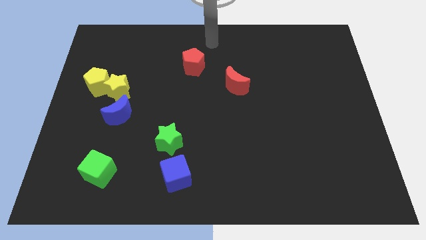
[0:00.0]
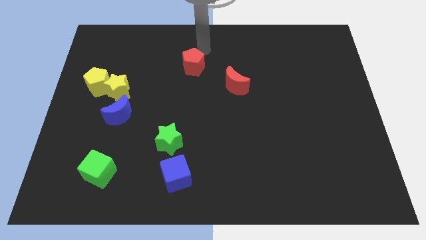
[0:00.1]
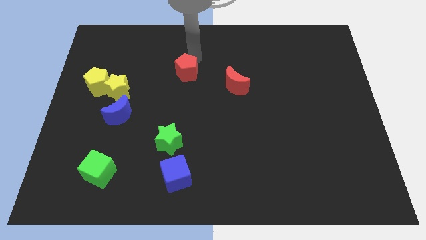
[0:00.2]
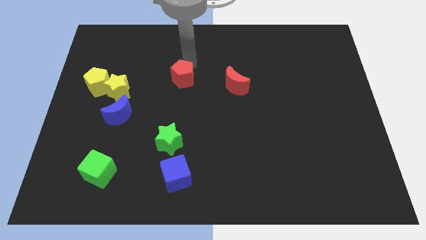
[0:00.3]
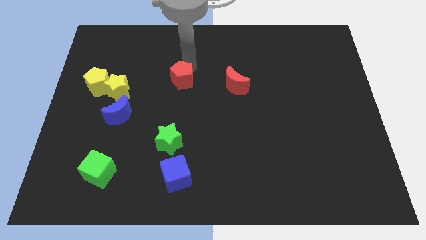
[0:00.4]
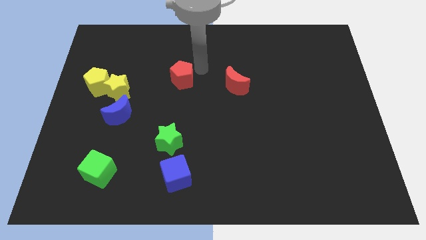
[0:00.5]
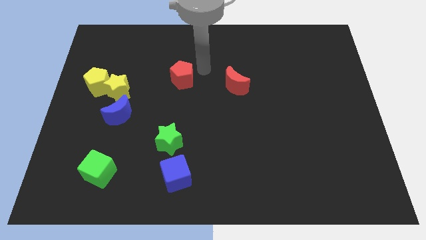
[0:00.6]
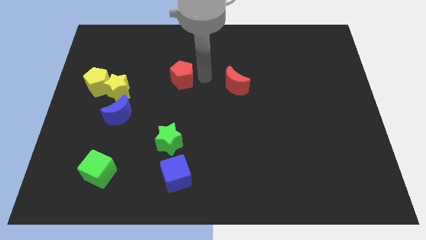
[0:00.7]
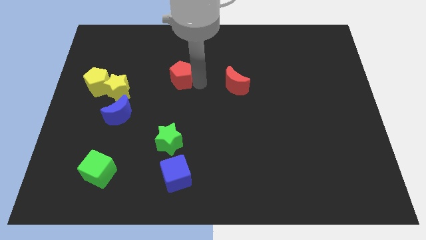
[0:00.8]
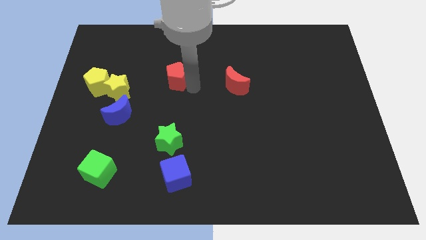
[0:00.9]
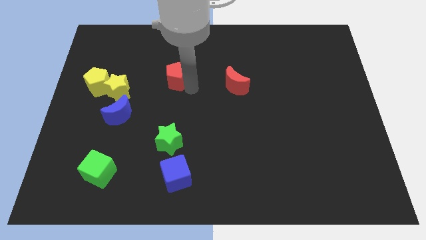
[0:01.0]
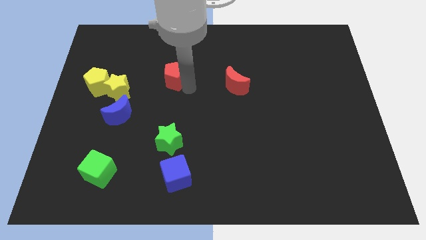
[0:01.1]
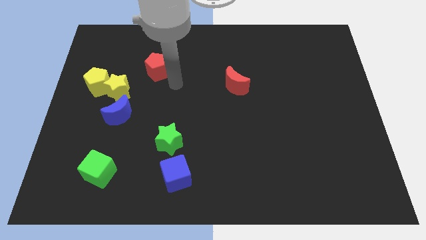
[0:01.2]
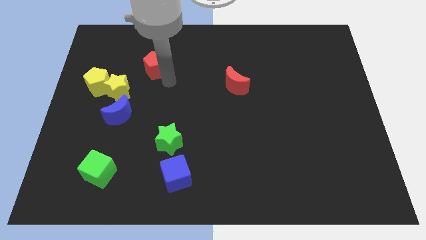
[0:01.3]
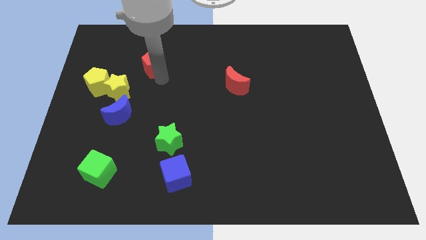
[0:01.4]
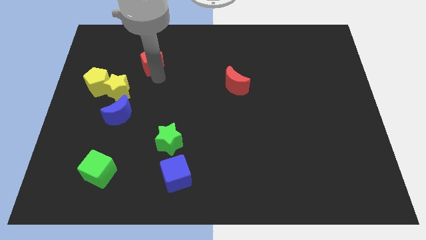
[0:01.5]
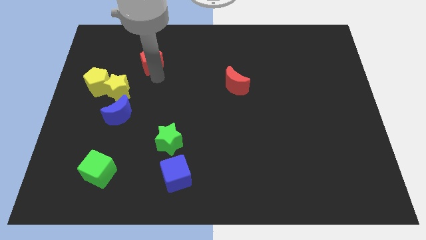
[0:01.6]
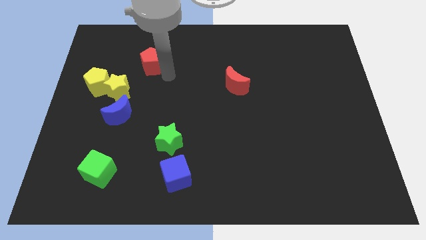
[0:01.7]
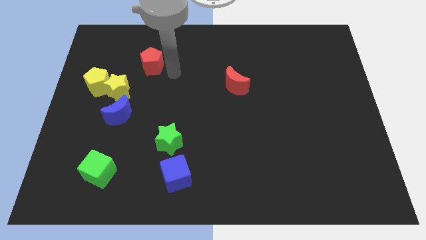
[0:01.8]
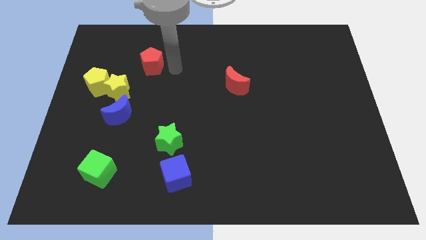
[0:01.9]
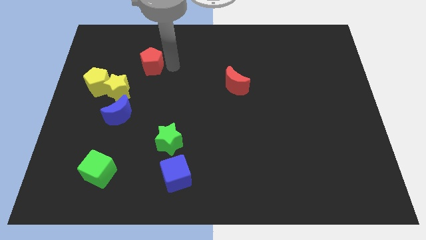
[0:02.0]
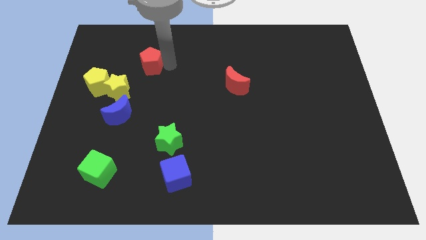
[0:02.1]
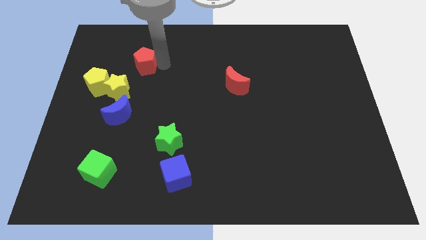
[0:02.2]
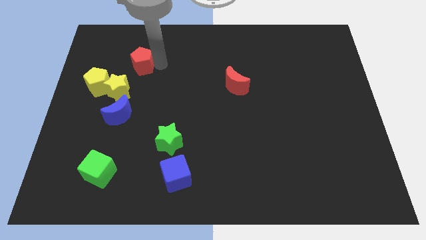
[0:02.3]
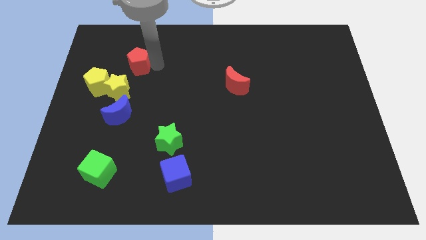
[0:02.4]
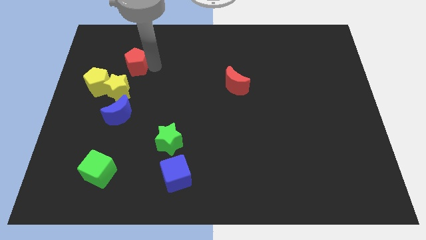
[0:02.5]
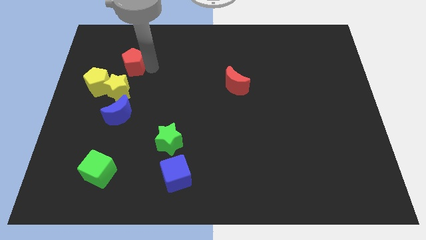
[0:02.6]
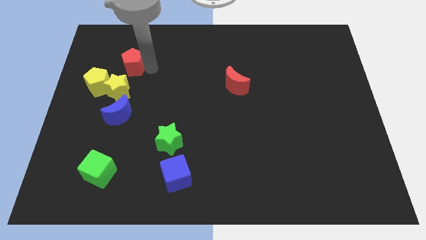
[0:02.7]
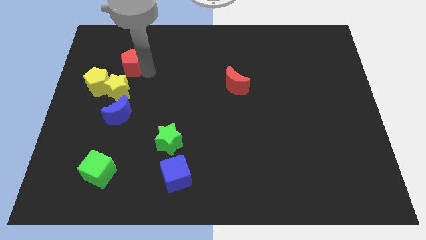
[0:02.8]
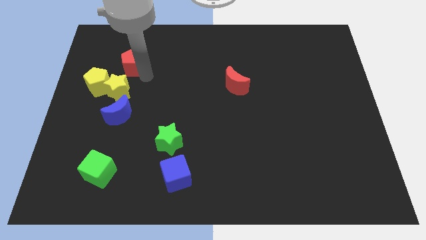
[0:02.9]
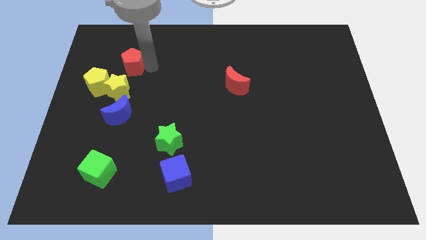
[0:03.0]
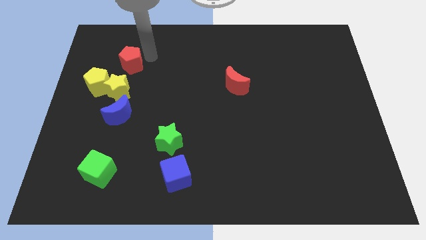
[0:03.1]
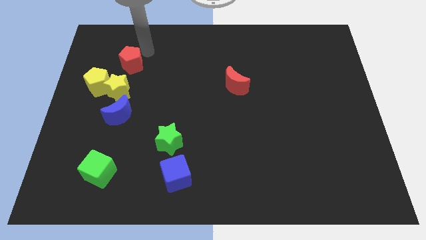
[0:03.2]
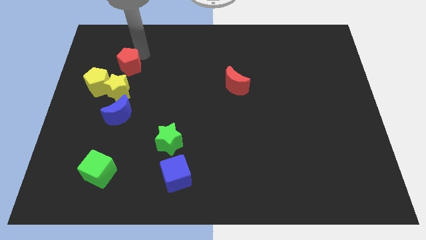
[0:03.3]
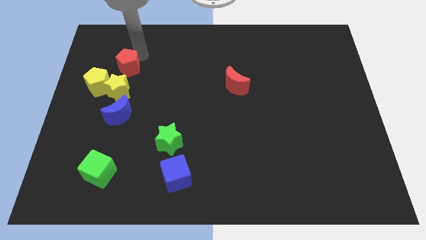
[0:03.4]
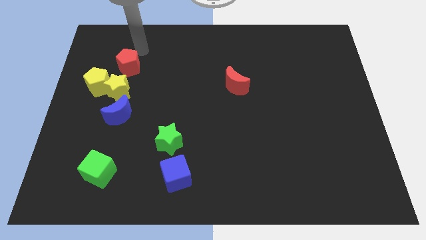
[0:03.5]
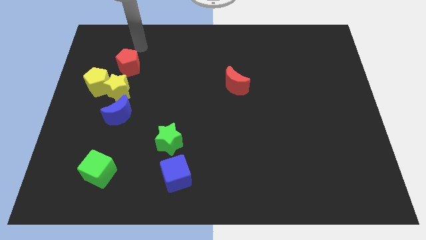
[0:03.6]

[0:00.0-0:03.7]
move the red pentagon to the right top of the yellow star

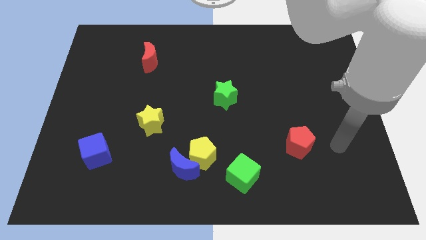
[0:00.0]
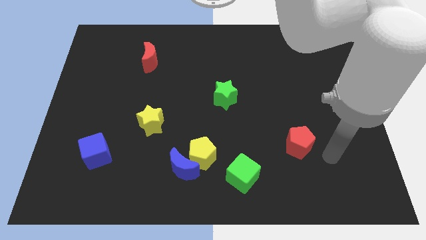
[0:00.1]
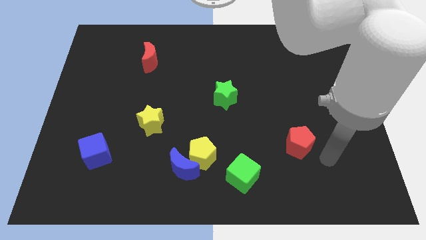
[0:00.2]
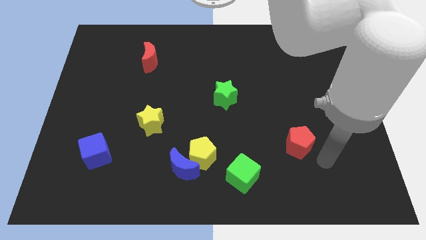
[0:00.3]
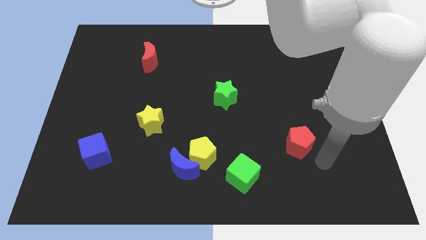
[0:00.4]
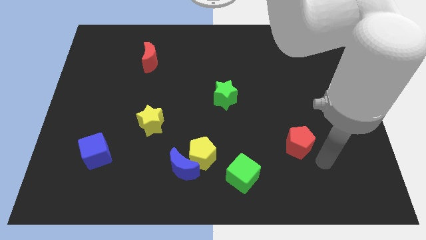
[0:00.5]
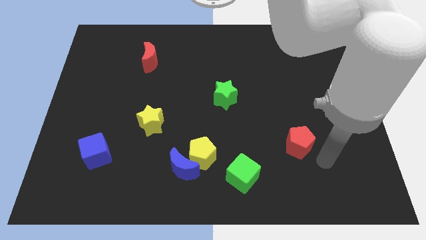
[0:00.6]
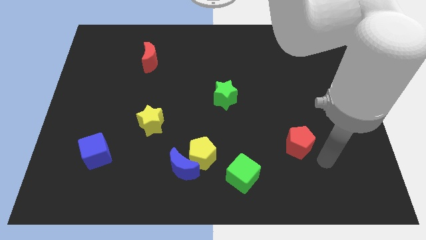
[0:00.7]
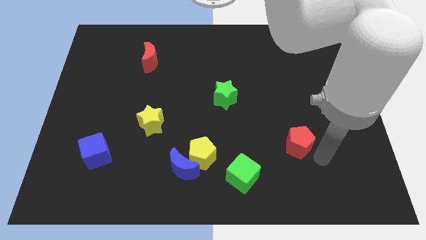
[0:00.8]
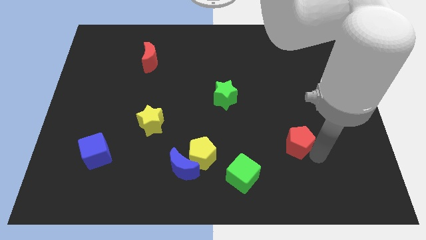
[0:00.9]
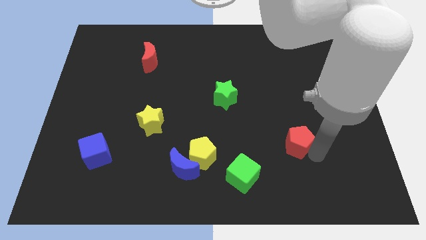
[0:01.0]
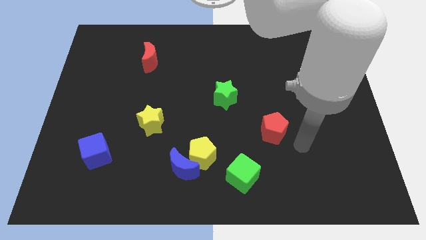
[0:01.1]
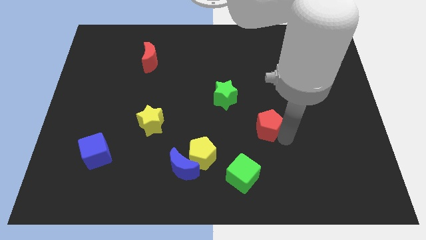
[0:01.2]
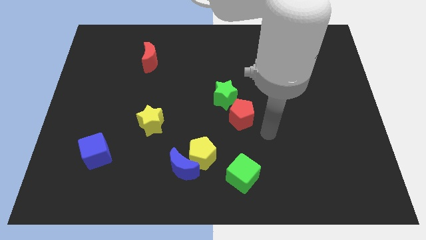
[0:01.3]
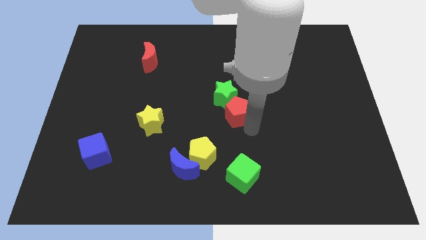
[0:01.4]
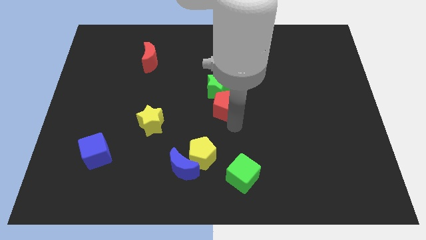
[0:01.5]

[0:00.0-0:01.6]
move the red pentagon into the bottom side of the green star

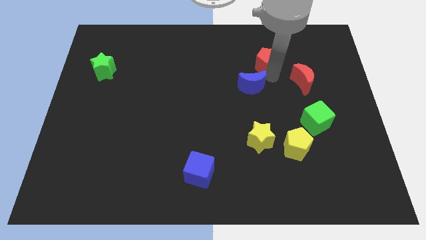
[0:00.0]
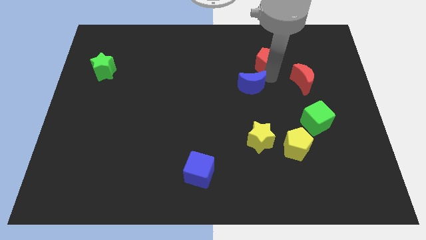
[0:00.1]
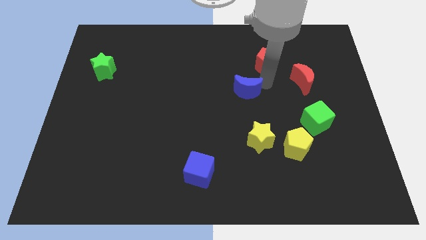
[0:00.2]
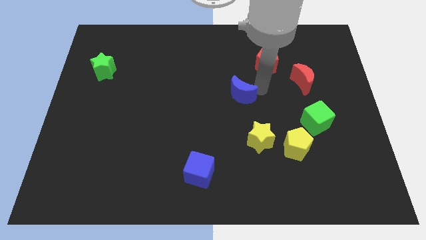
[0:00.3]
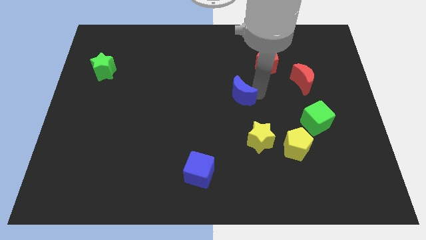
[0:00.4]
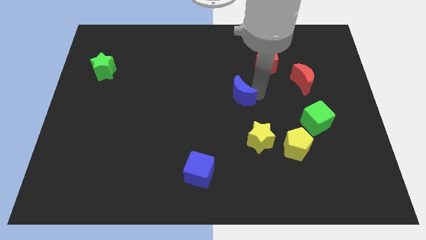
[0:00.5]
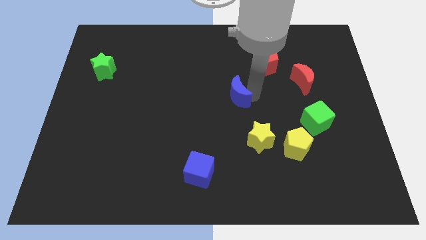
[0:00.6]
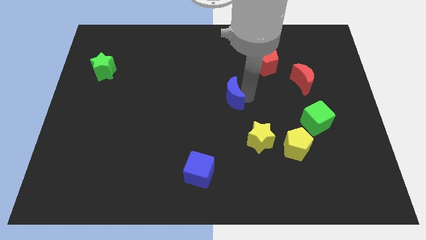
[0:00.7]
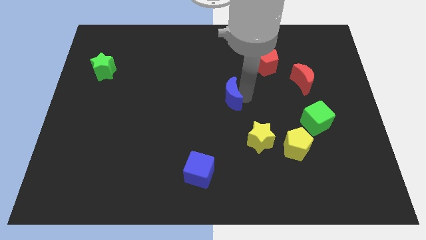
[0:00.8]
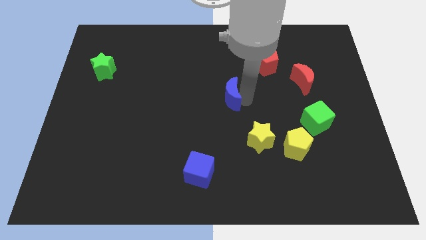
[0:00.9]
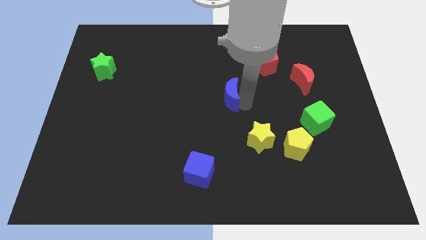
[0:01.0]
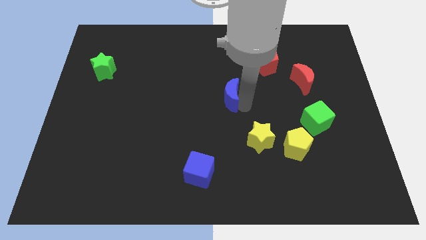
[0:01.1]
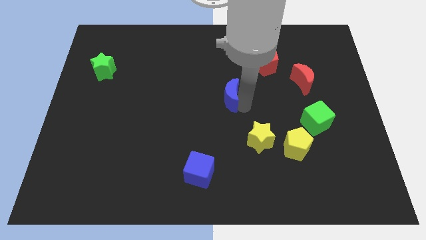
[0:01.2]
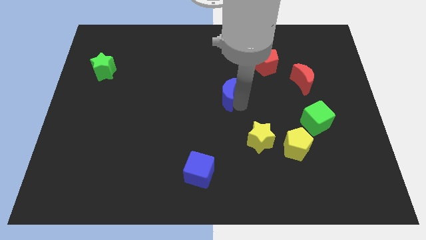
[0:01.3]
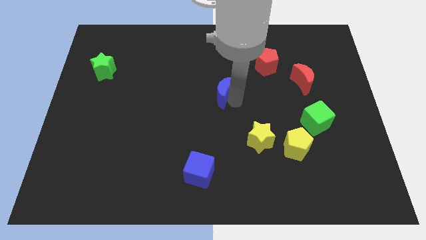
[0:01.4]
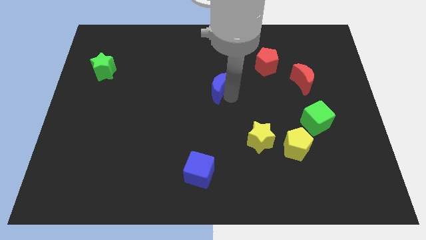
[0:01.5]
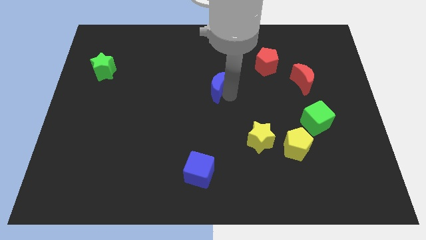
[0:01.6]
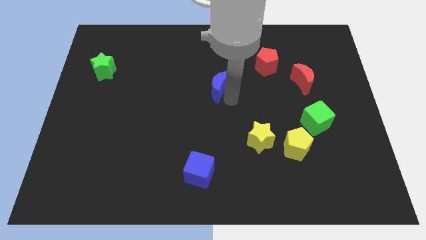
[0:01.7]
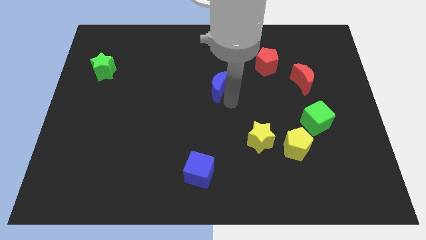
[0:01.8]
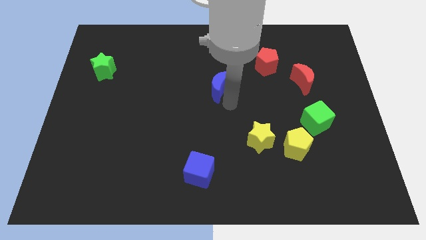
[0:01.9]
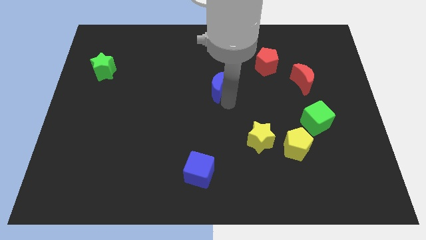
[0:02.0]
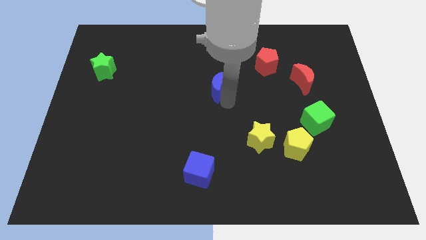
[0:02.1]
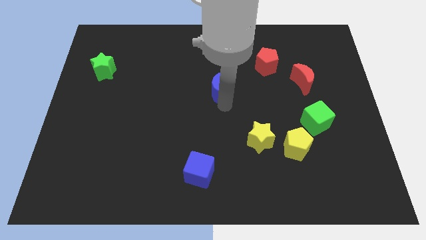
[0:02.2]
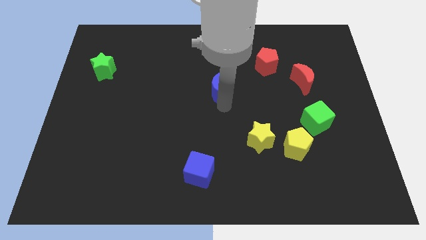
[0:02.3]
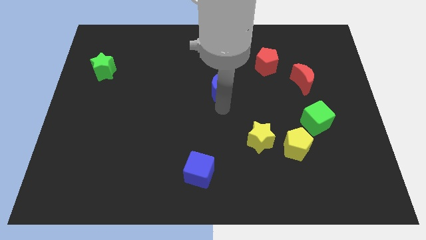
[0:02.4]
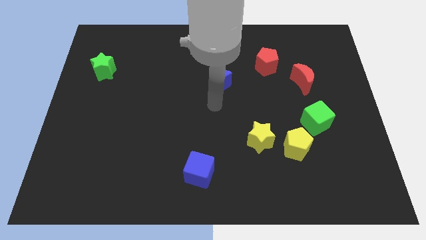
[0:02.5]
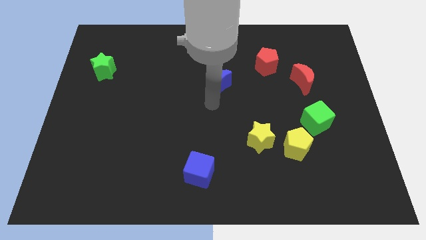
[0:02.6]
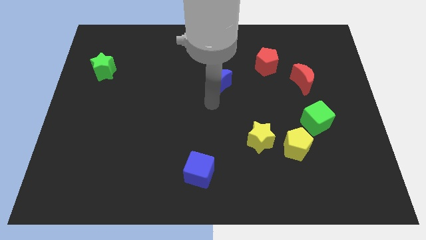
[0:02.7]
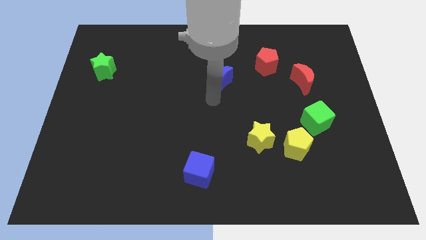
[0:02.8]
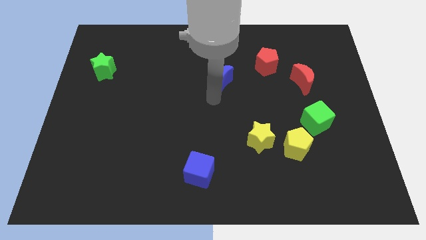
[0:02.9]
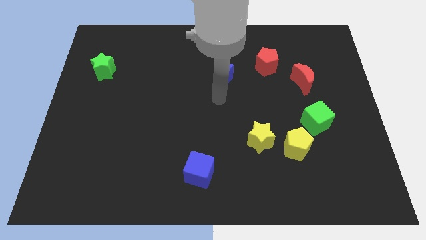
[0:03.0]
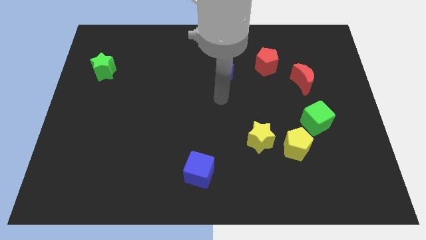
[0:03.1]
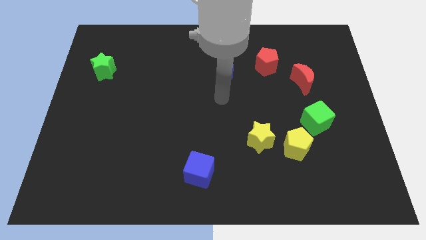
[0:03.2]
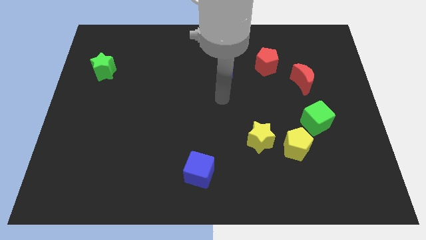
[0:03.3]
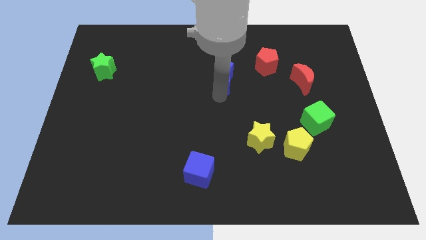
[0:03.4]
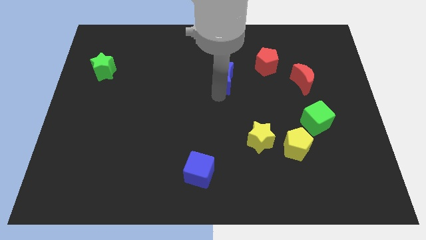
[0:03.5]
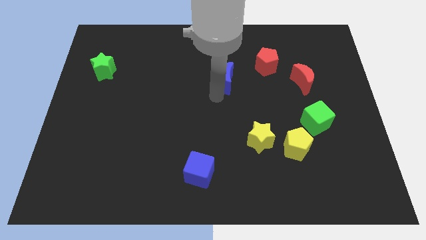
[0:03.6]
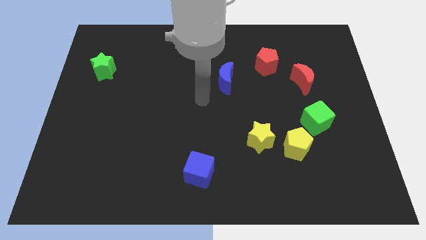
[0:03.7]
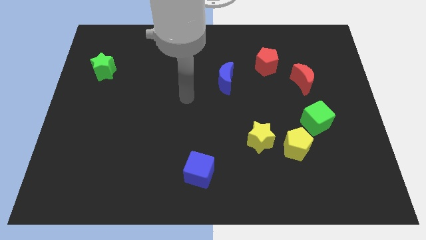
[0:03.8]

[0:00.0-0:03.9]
place the blue moon above the blue cube
